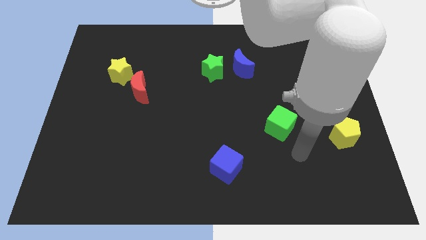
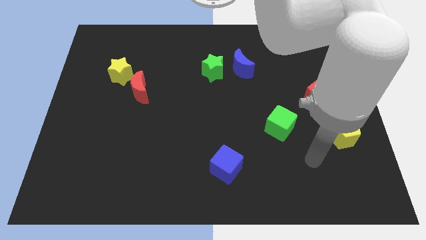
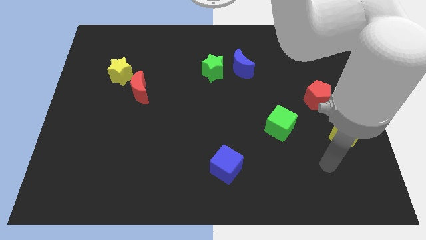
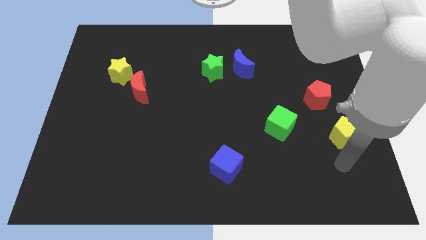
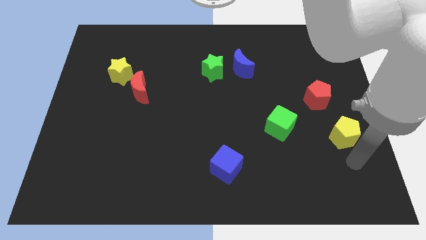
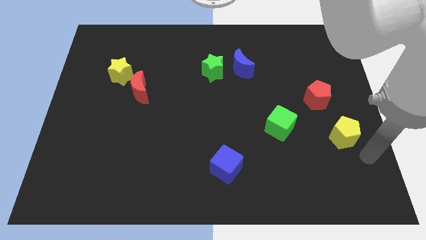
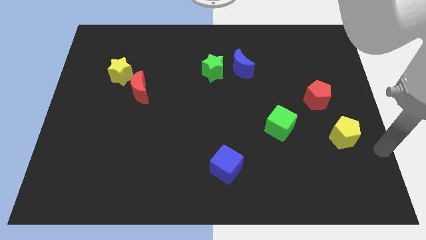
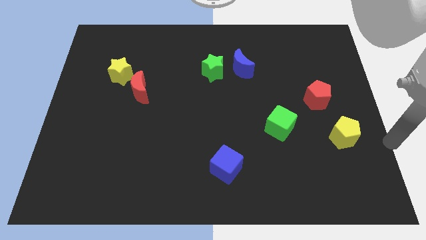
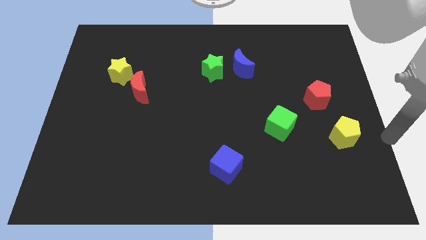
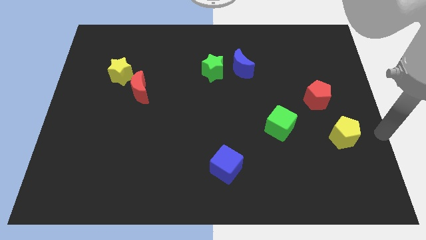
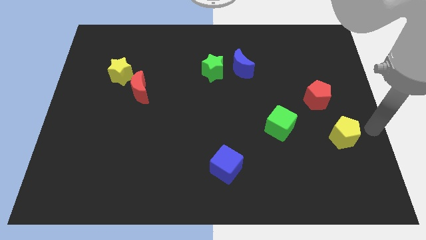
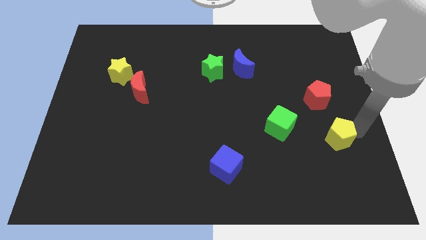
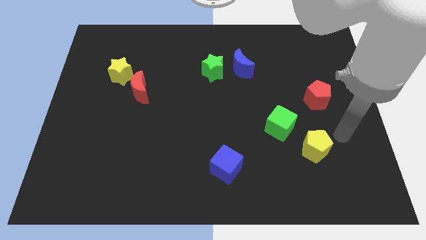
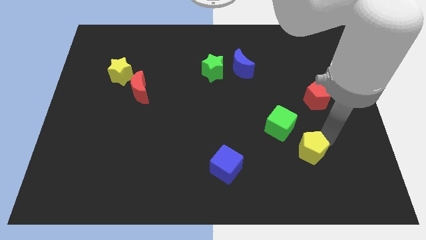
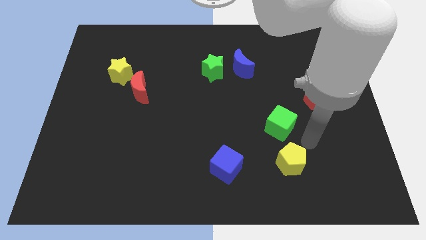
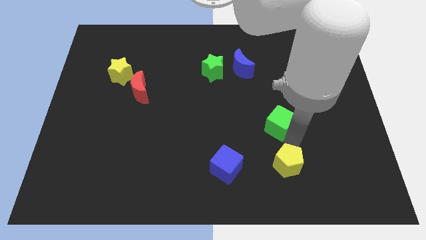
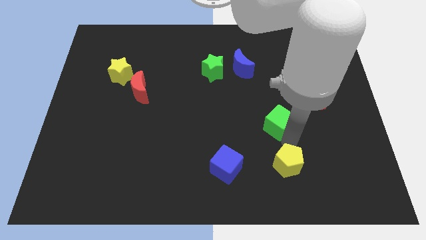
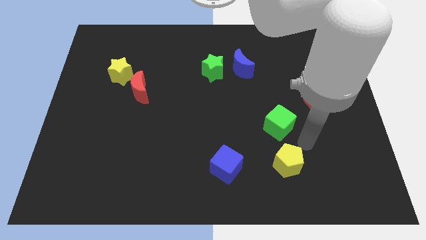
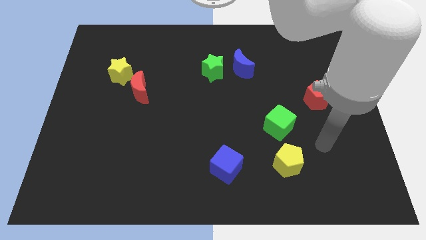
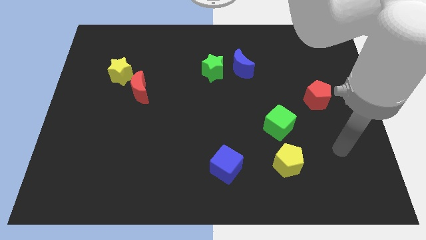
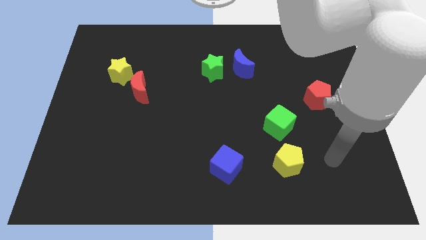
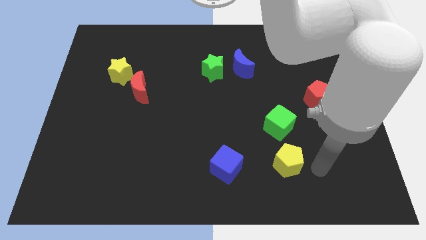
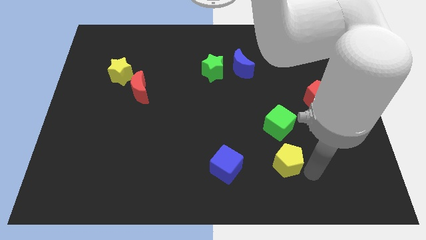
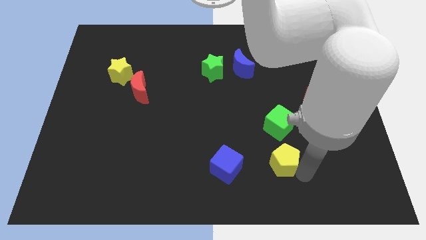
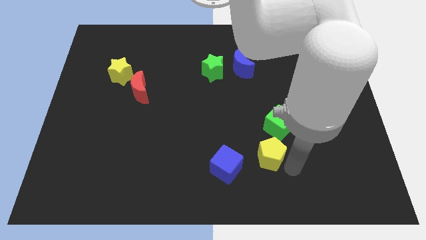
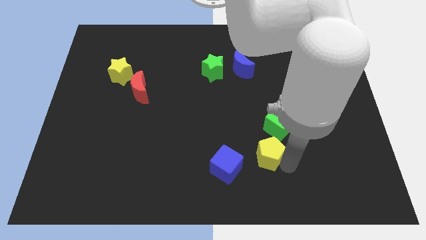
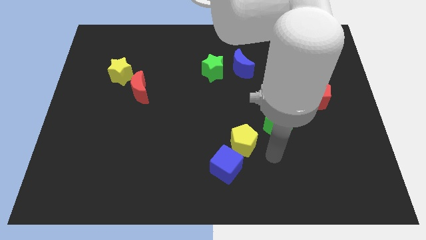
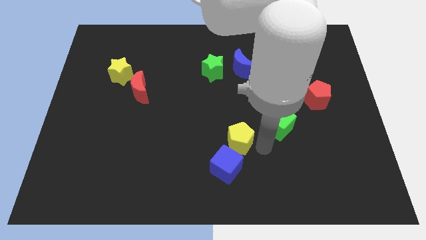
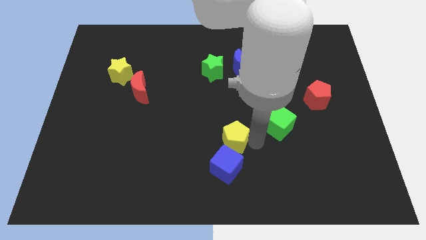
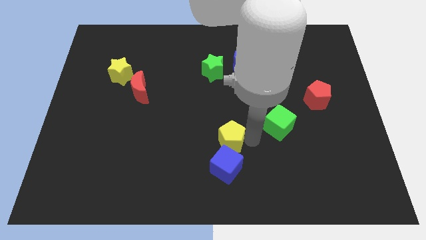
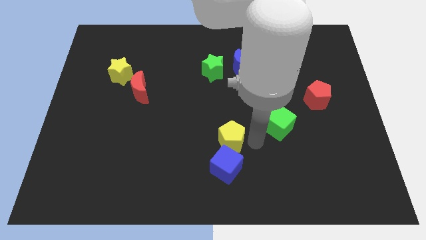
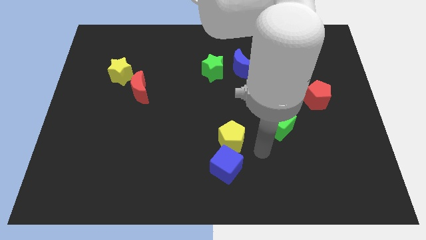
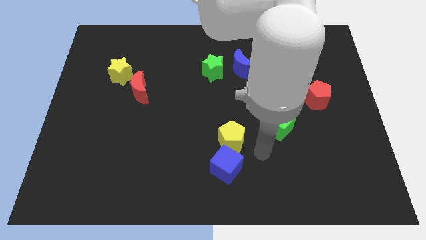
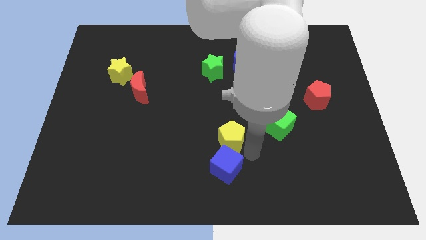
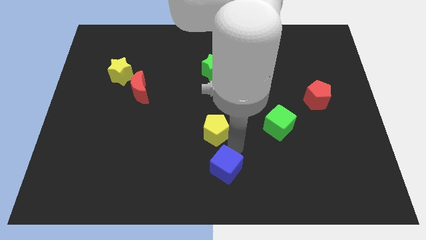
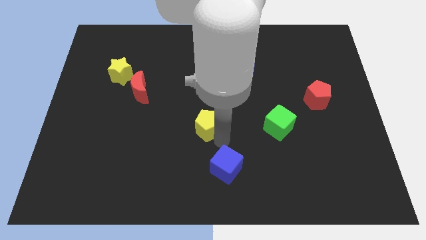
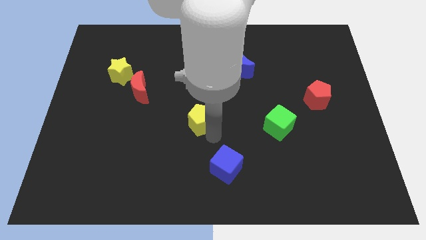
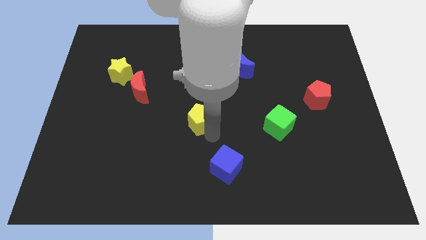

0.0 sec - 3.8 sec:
slide the yellow pentagon diagonally on the top left side of the blue cube

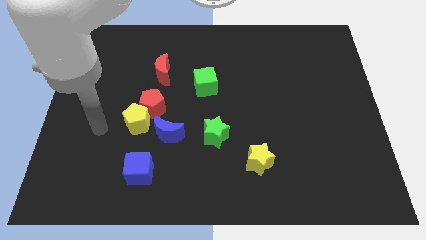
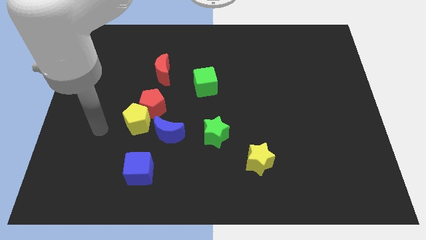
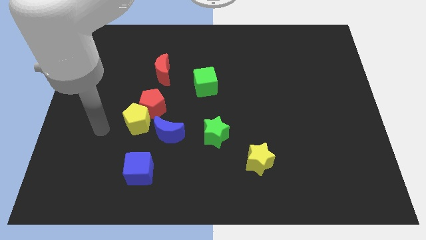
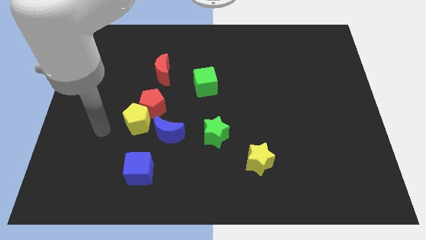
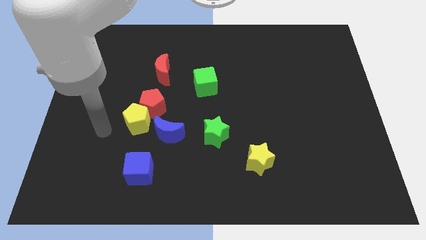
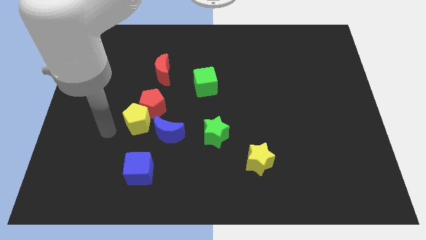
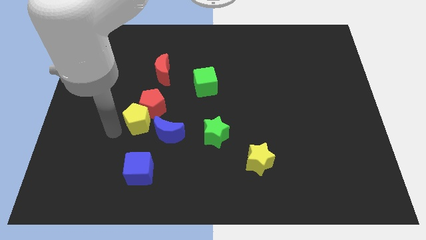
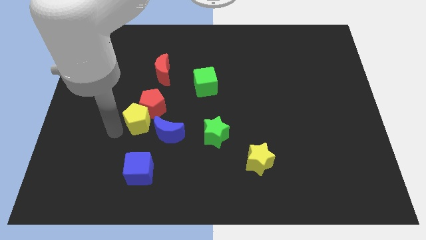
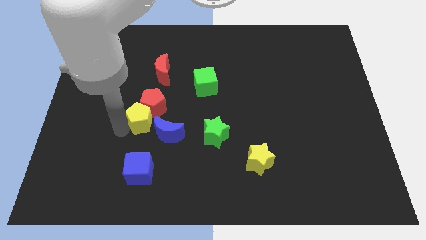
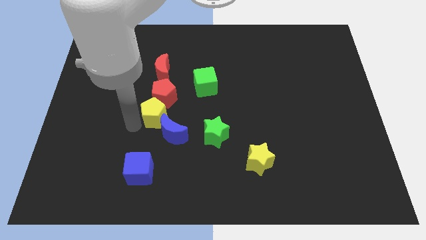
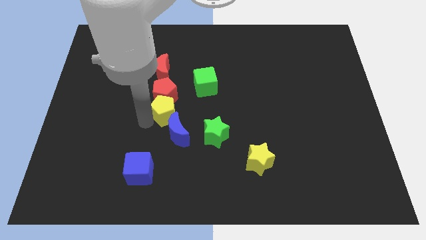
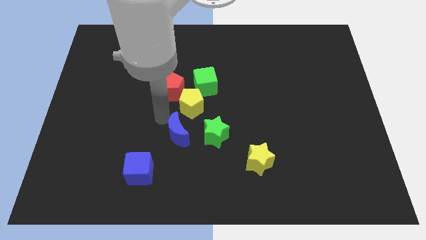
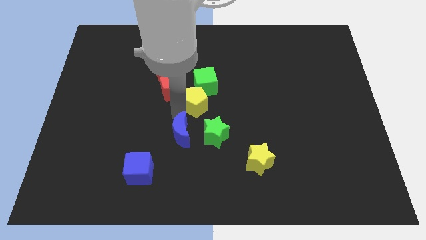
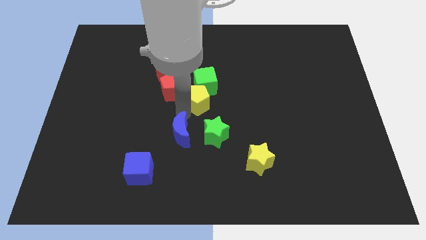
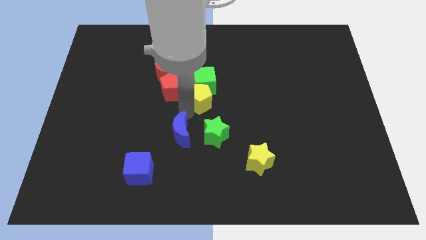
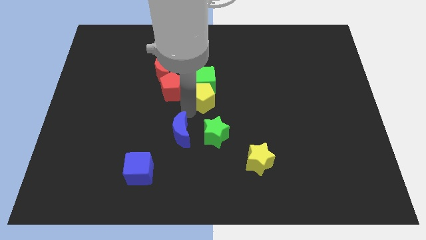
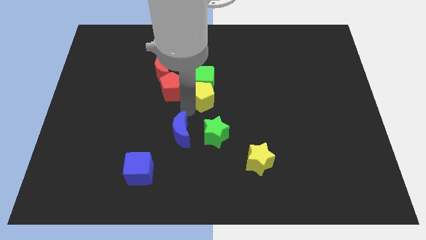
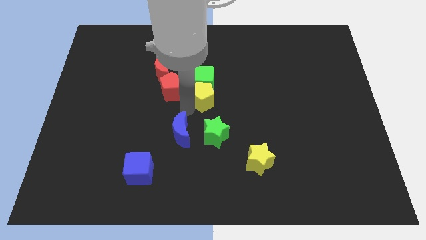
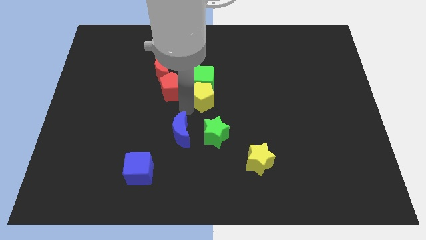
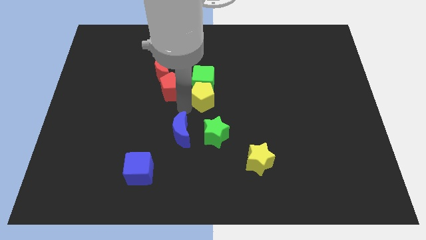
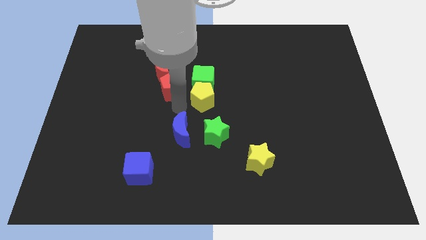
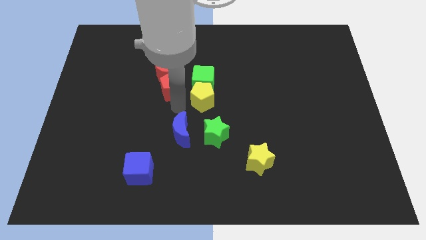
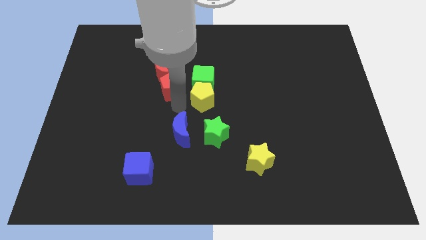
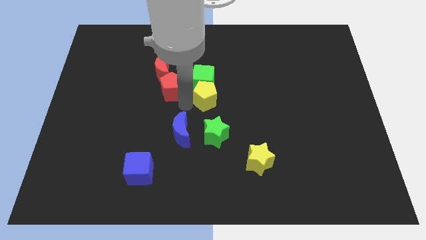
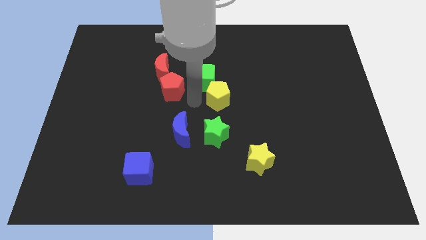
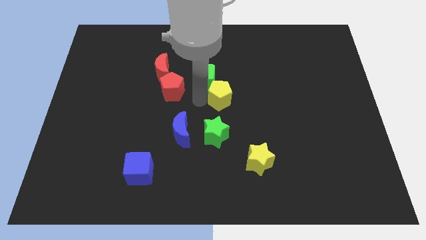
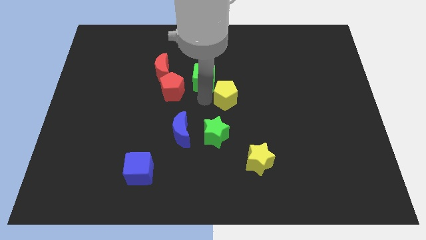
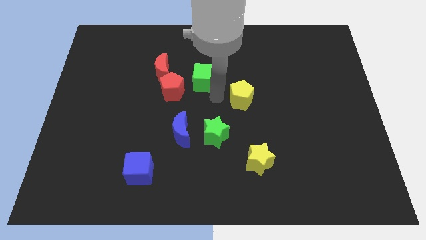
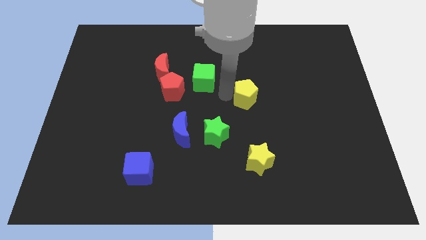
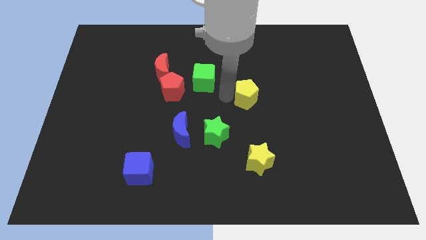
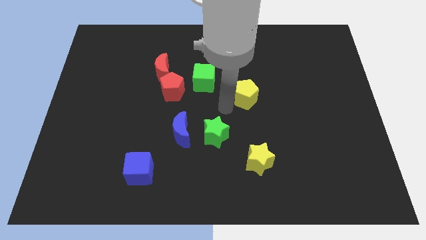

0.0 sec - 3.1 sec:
move the yellow pentagon towards the top right

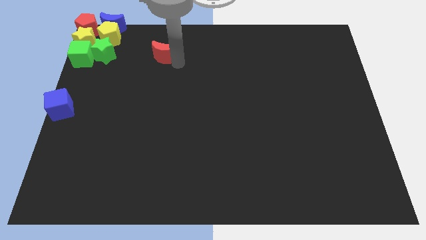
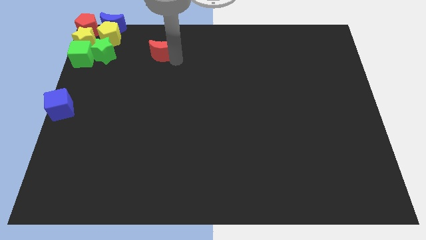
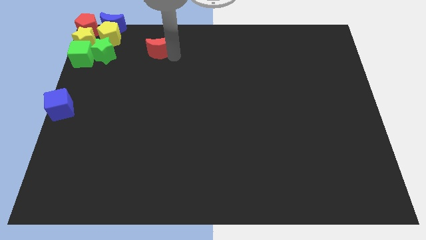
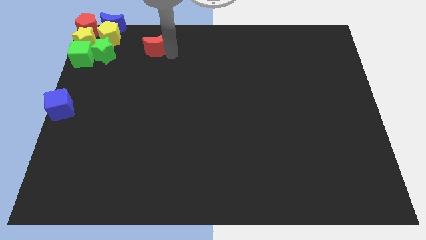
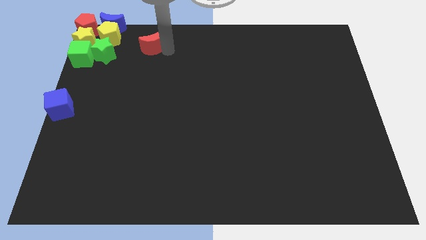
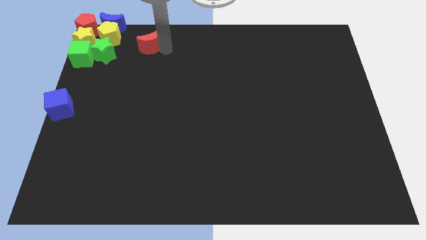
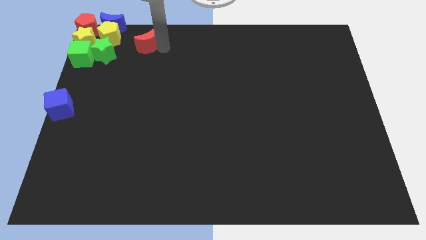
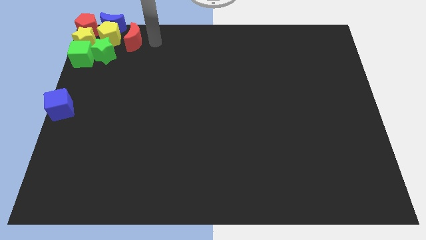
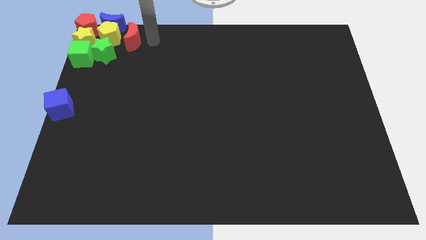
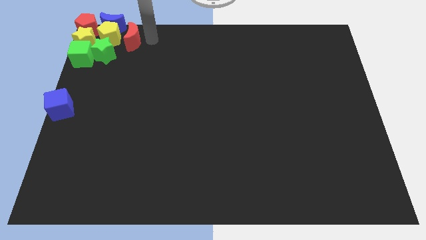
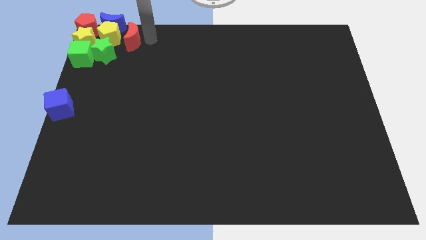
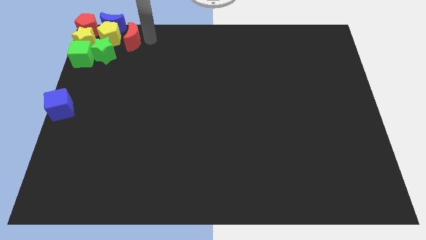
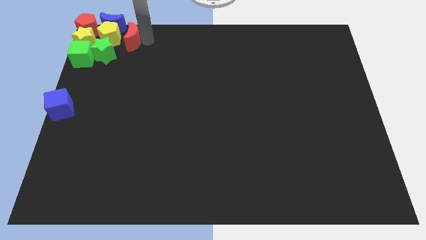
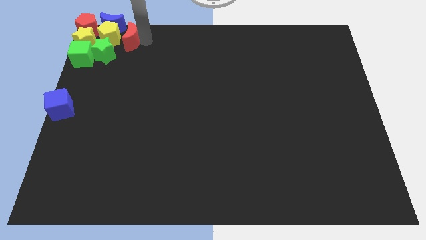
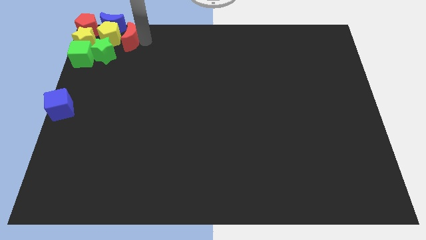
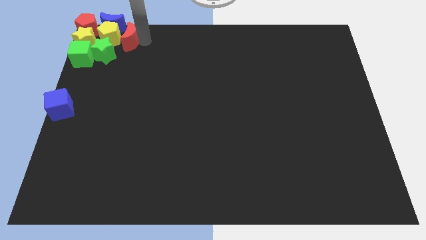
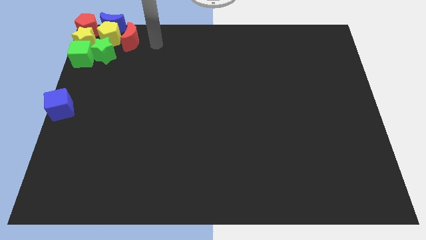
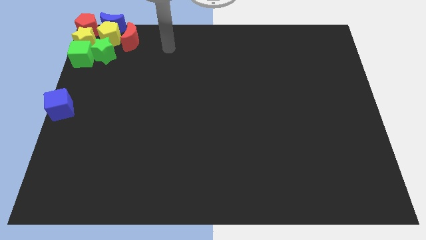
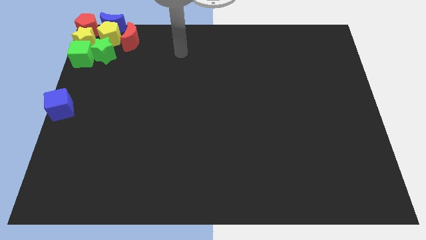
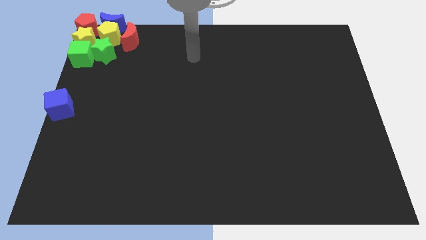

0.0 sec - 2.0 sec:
place the red crescent at top left

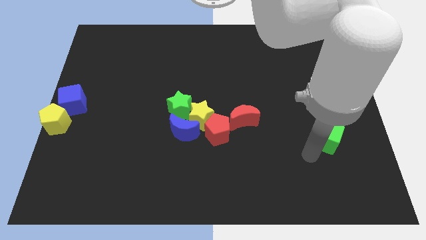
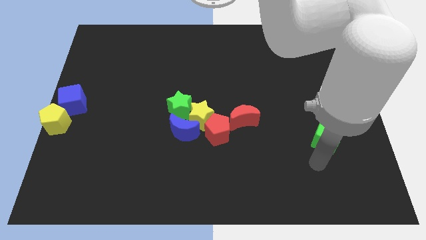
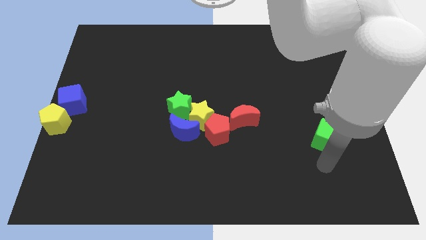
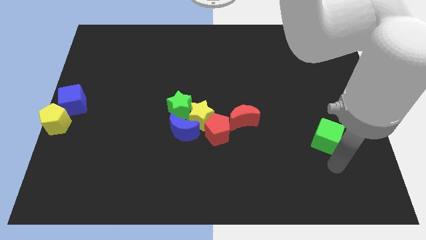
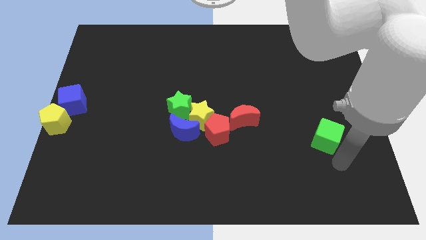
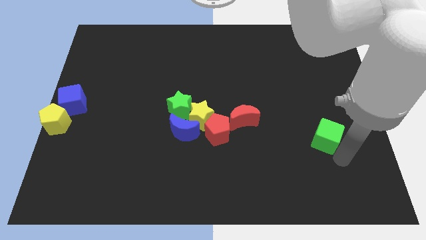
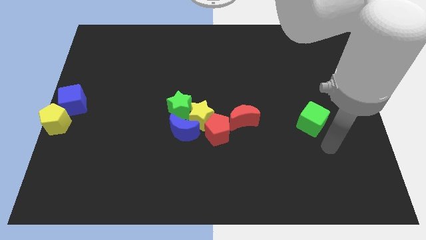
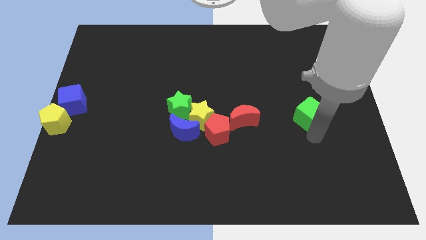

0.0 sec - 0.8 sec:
move the green cube horizontal to the red crescent
